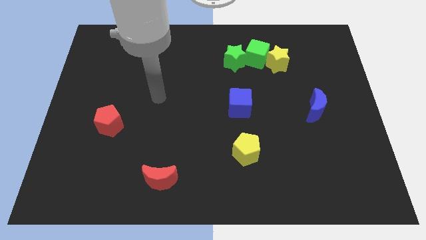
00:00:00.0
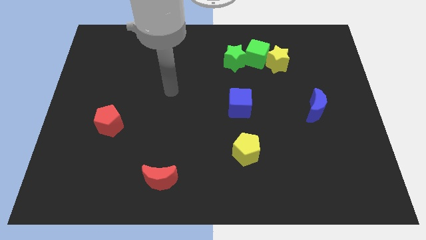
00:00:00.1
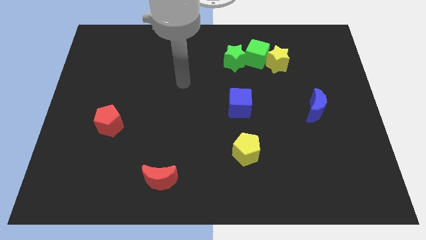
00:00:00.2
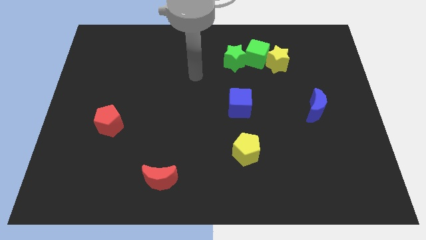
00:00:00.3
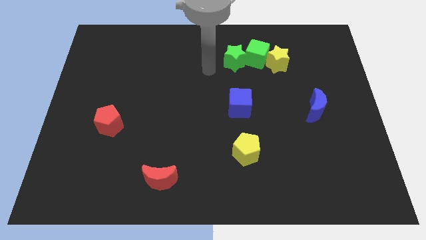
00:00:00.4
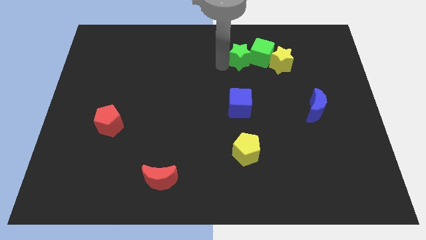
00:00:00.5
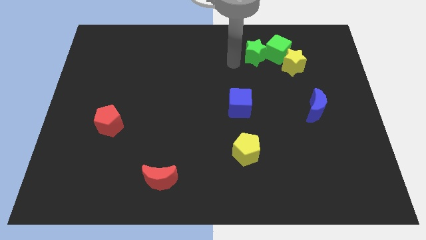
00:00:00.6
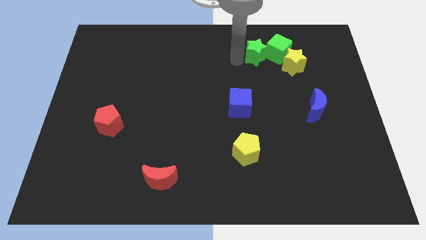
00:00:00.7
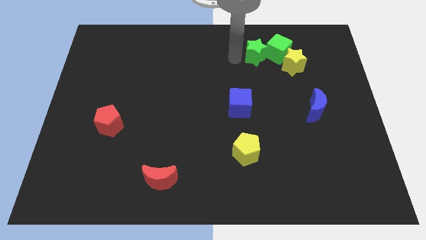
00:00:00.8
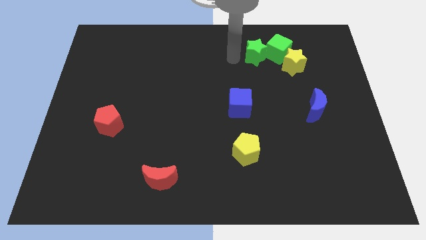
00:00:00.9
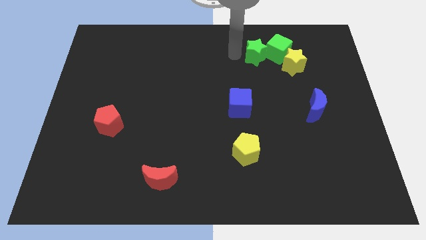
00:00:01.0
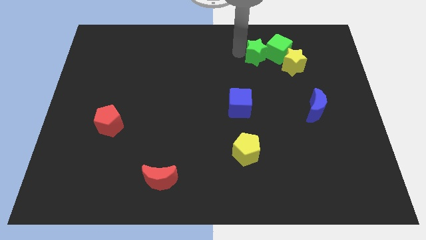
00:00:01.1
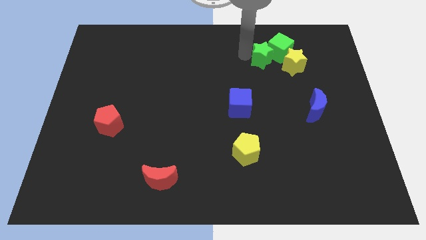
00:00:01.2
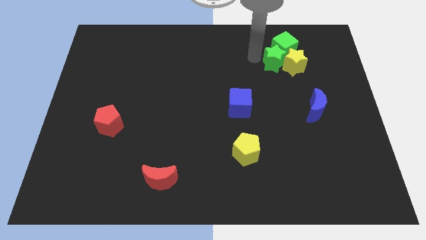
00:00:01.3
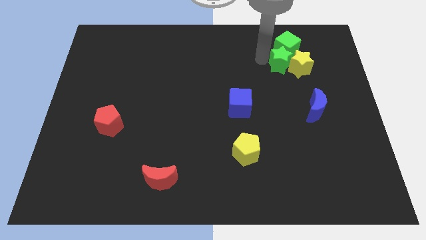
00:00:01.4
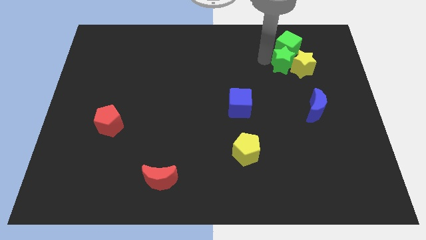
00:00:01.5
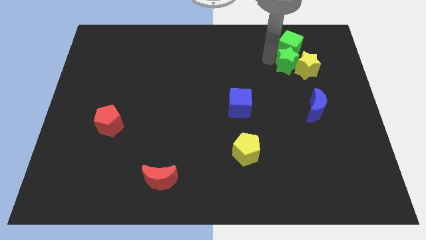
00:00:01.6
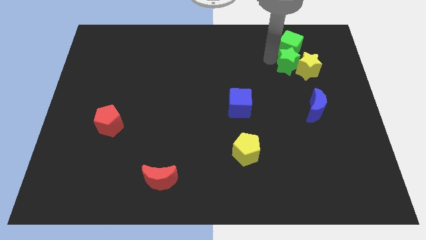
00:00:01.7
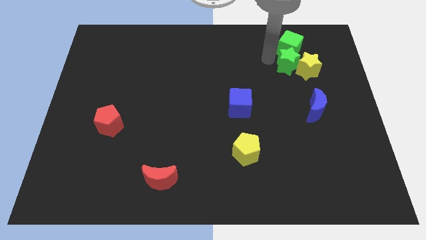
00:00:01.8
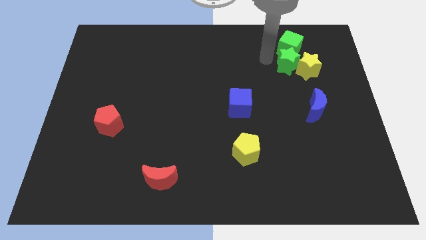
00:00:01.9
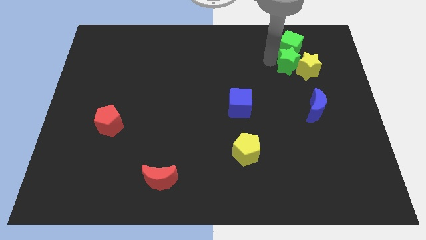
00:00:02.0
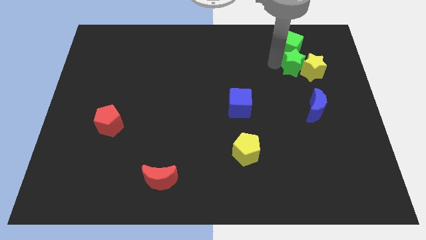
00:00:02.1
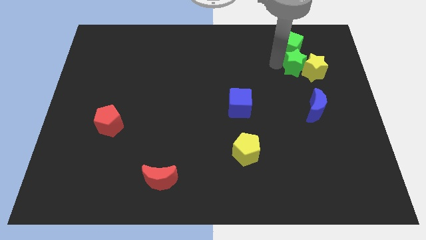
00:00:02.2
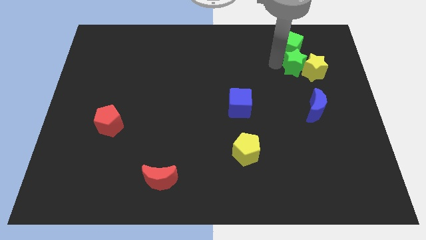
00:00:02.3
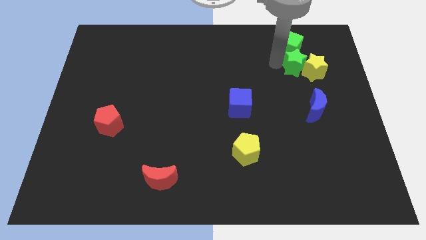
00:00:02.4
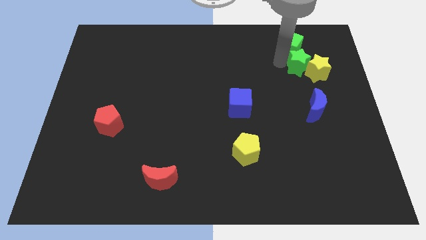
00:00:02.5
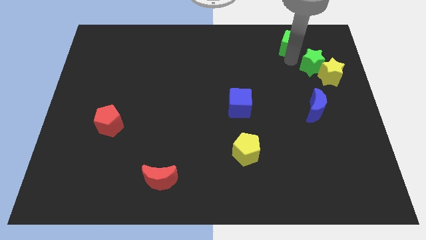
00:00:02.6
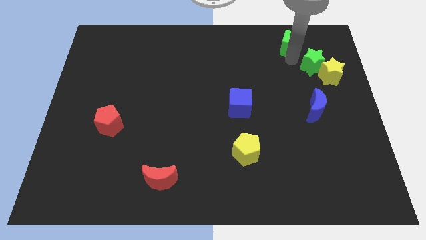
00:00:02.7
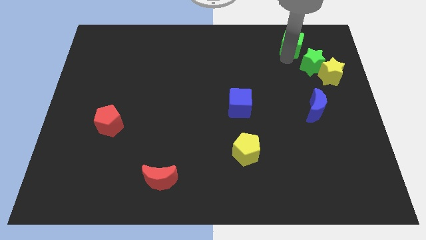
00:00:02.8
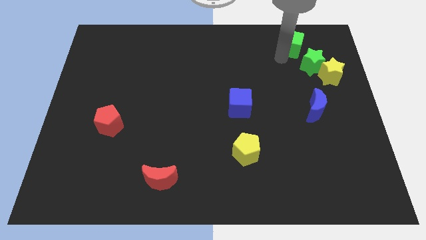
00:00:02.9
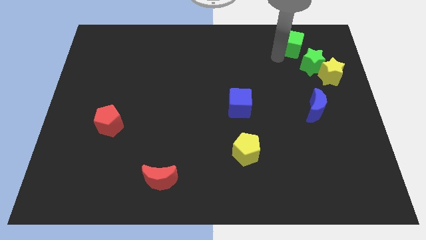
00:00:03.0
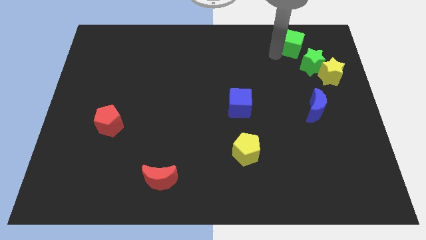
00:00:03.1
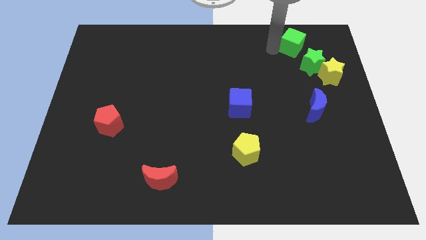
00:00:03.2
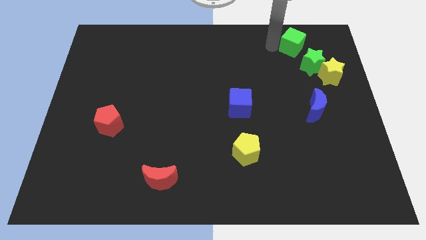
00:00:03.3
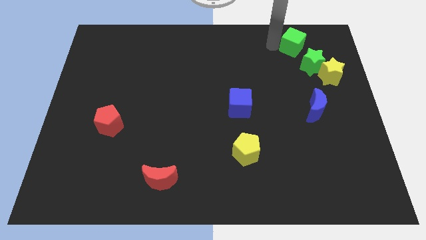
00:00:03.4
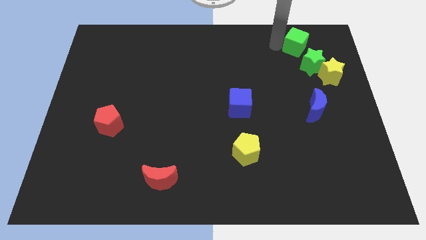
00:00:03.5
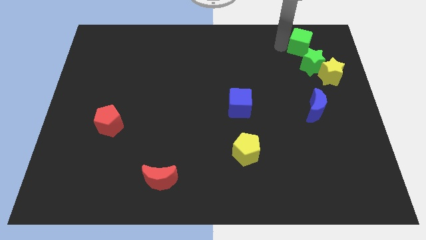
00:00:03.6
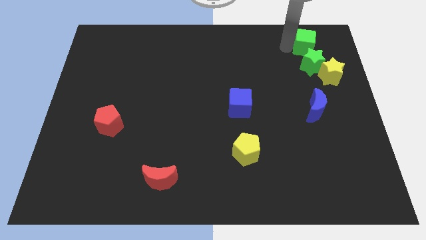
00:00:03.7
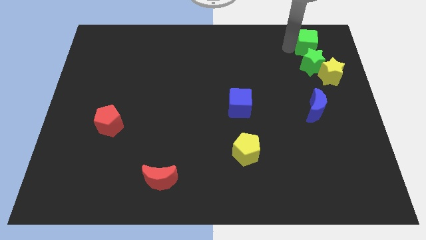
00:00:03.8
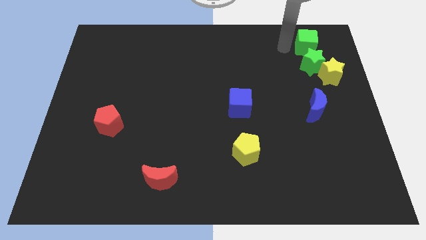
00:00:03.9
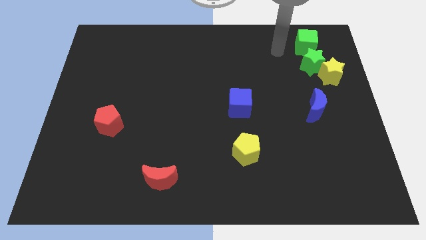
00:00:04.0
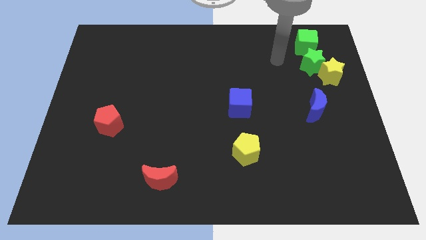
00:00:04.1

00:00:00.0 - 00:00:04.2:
move the group of green blocks and yellow star to the top right of the board

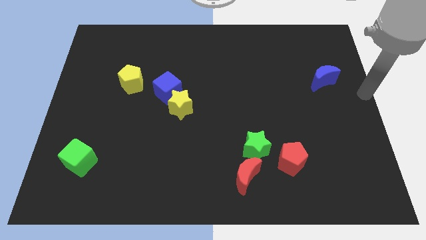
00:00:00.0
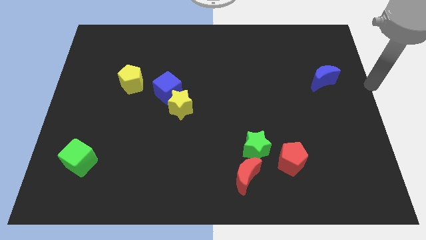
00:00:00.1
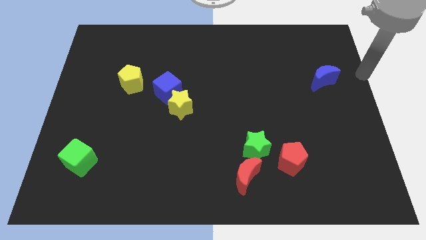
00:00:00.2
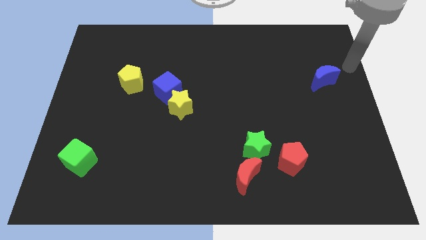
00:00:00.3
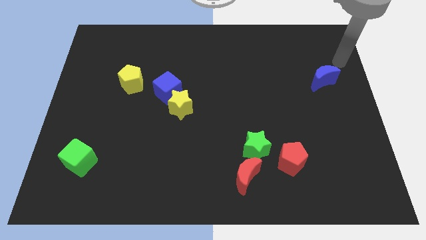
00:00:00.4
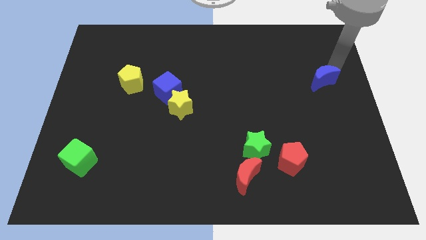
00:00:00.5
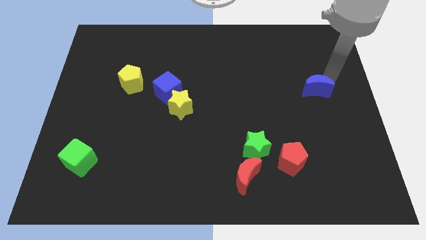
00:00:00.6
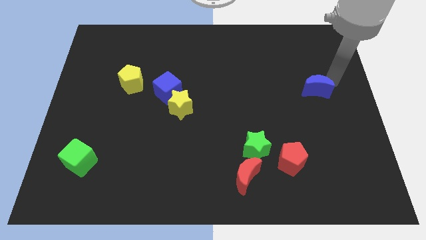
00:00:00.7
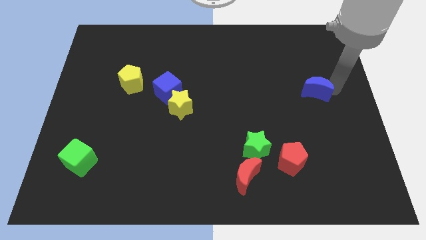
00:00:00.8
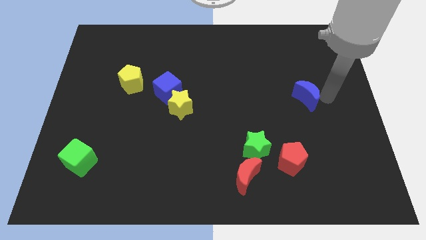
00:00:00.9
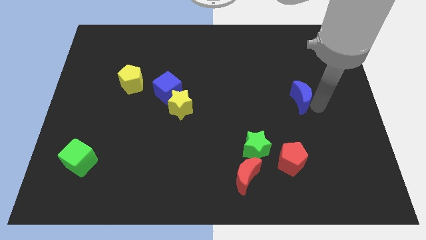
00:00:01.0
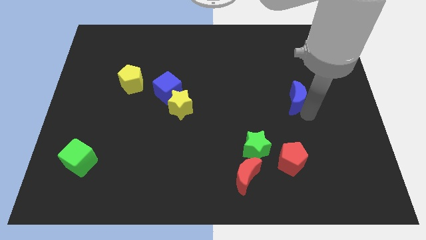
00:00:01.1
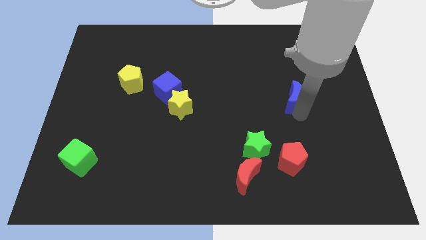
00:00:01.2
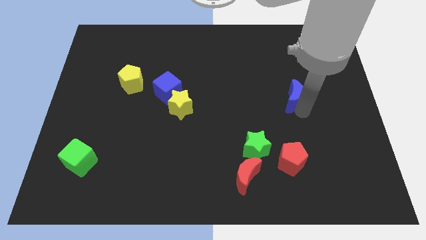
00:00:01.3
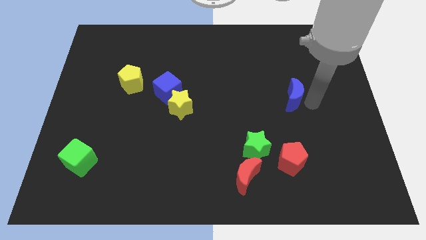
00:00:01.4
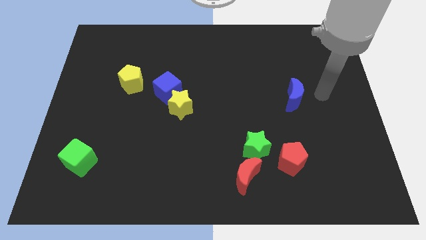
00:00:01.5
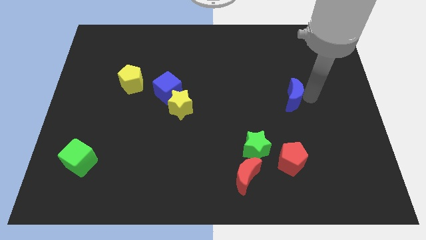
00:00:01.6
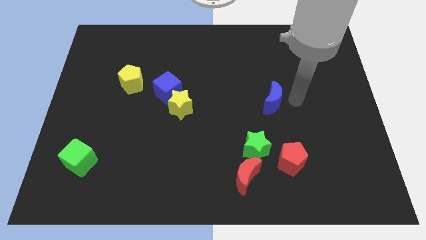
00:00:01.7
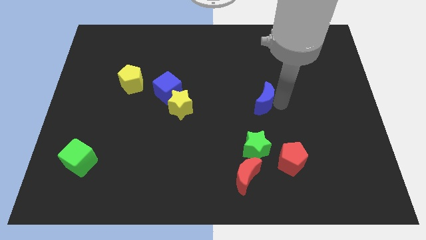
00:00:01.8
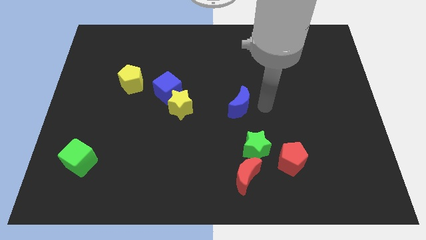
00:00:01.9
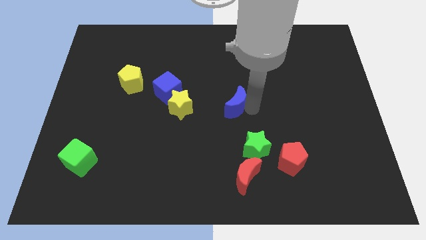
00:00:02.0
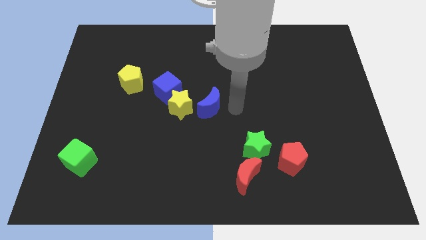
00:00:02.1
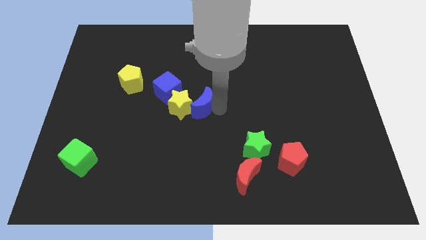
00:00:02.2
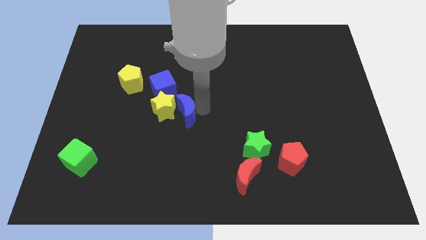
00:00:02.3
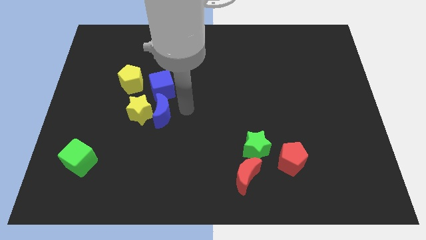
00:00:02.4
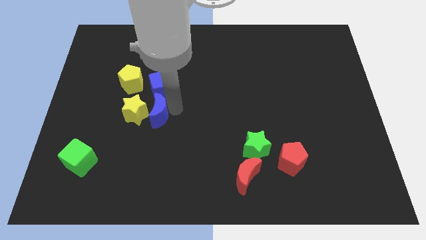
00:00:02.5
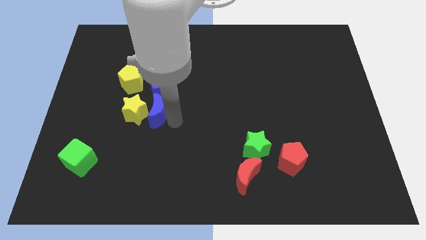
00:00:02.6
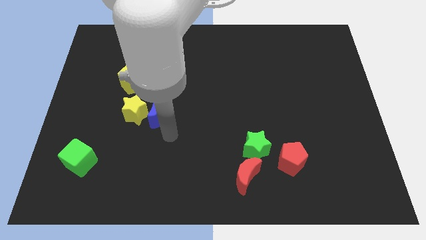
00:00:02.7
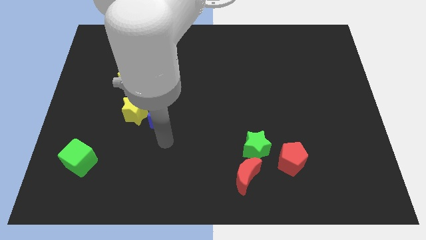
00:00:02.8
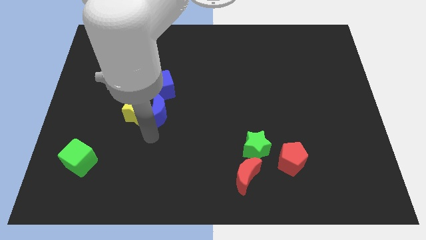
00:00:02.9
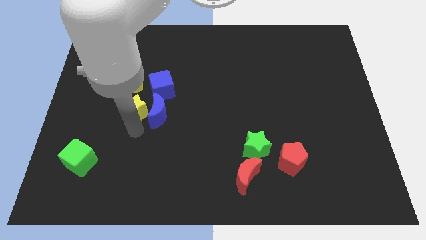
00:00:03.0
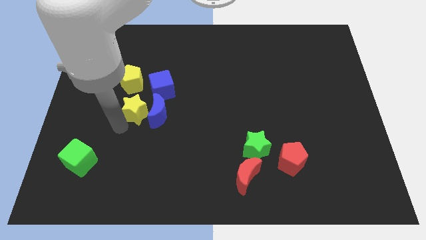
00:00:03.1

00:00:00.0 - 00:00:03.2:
drag the blue crescent into the yellow star

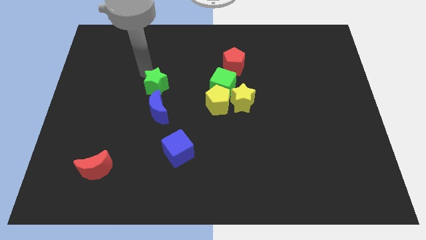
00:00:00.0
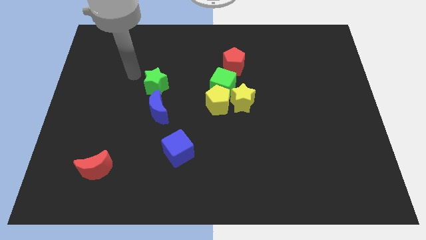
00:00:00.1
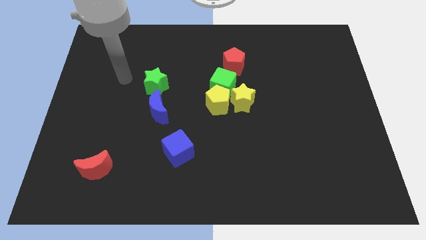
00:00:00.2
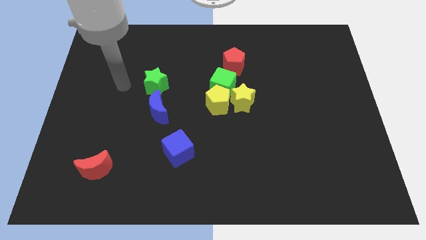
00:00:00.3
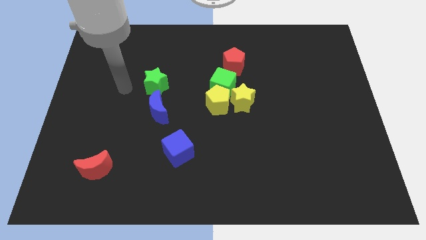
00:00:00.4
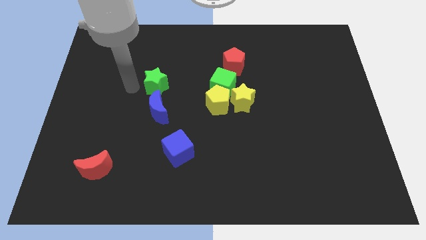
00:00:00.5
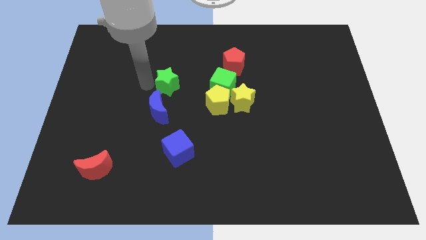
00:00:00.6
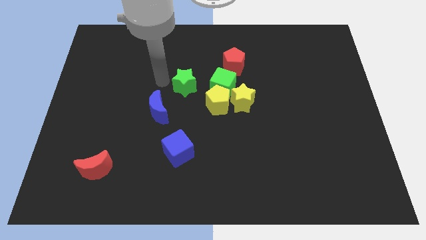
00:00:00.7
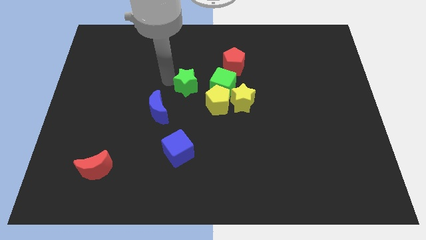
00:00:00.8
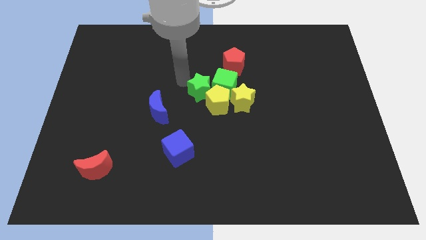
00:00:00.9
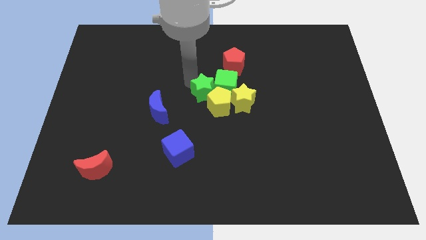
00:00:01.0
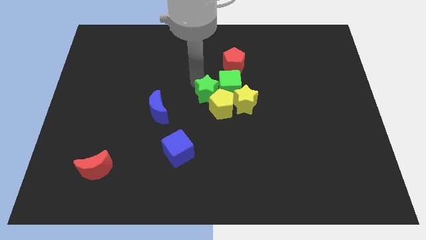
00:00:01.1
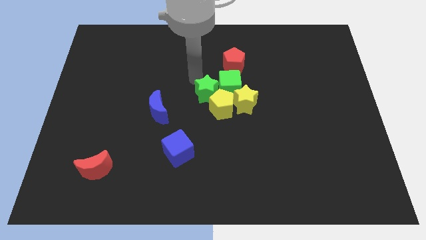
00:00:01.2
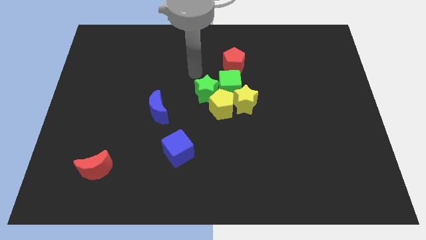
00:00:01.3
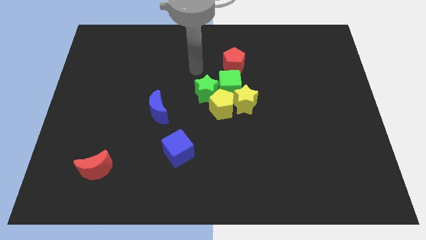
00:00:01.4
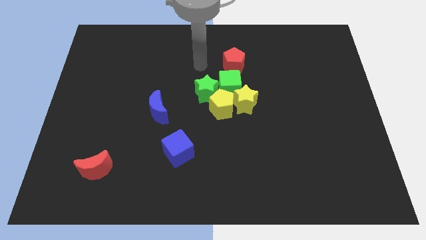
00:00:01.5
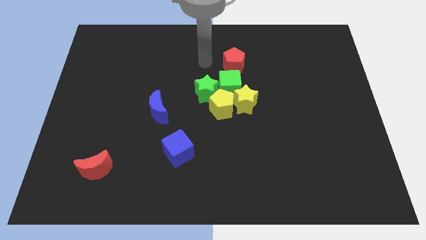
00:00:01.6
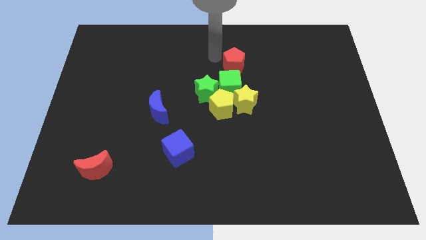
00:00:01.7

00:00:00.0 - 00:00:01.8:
push the green star towards the top left side of the yellow pentagon
